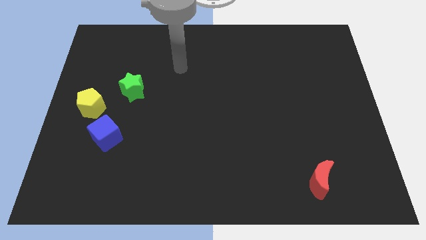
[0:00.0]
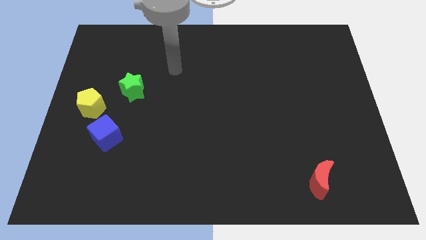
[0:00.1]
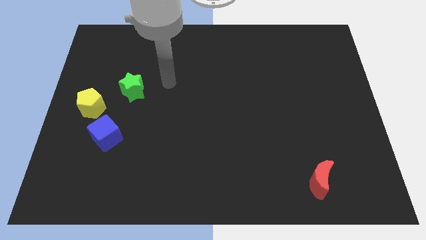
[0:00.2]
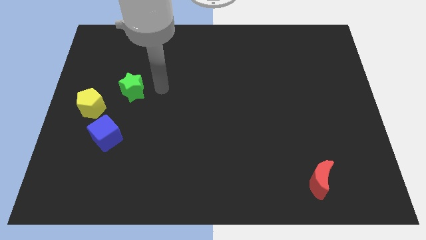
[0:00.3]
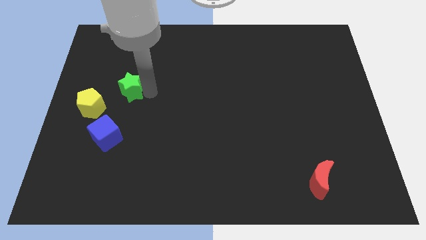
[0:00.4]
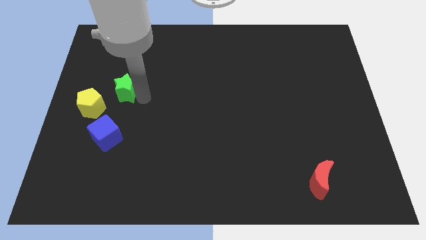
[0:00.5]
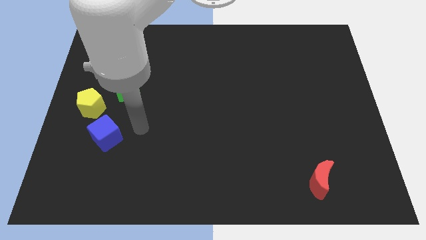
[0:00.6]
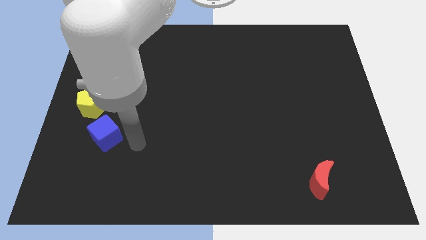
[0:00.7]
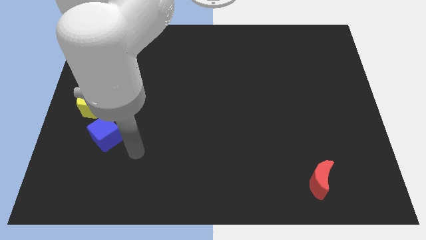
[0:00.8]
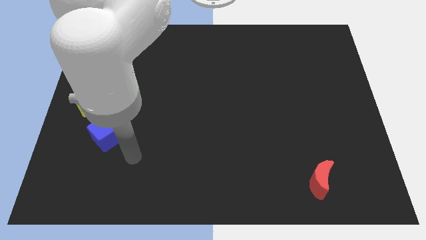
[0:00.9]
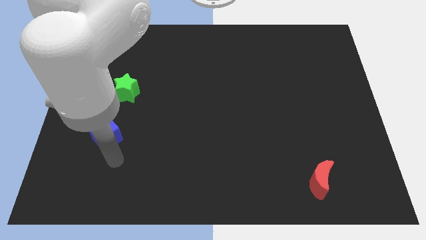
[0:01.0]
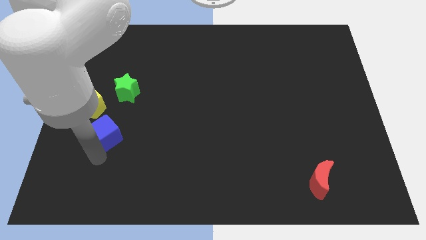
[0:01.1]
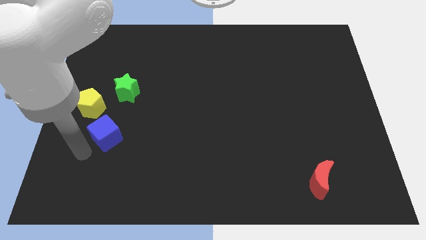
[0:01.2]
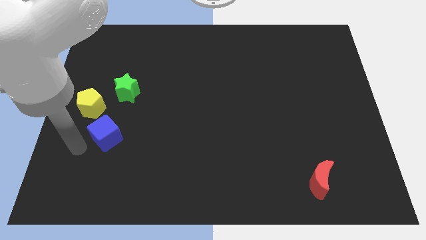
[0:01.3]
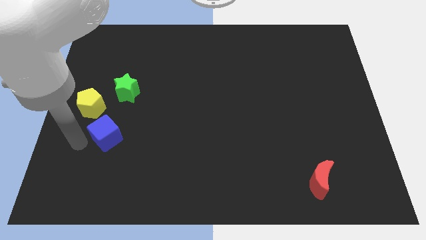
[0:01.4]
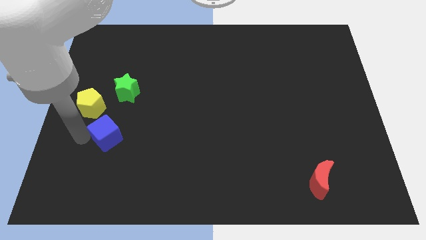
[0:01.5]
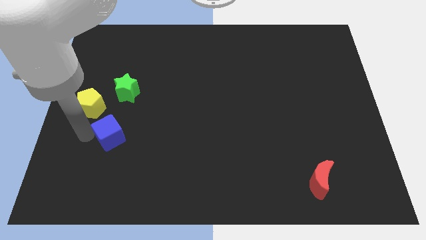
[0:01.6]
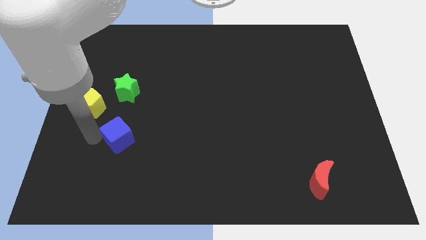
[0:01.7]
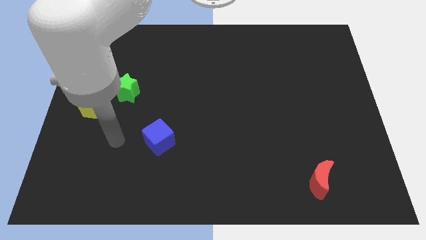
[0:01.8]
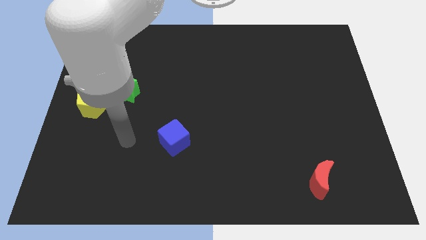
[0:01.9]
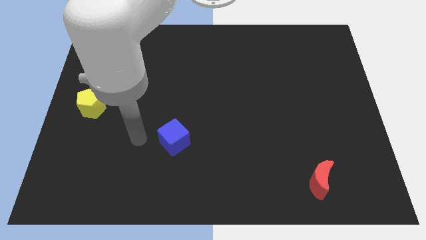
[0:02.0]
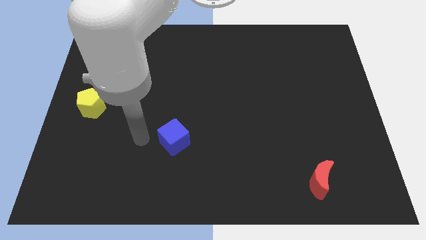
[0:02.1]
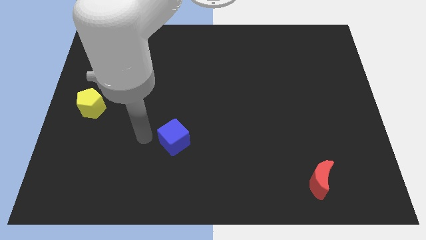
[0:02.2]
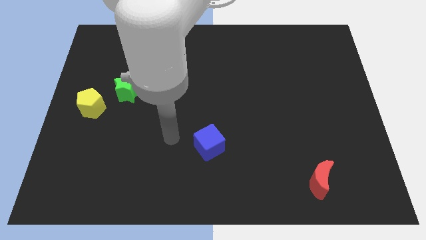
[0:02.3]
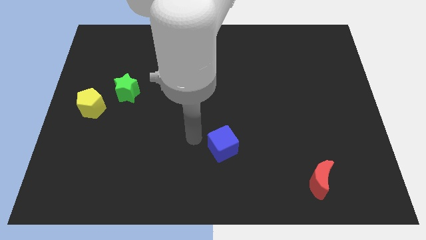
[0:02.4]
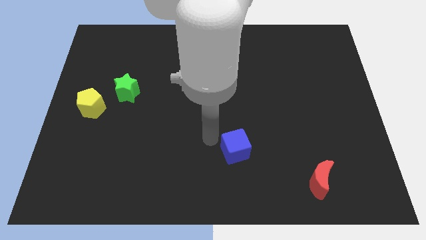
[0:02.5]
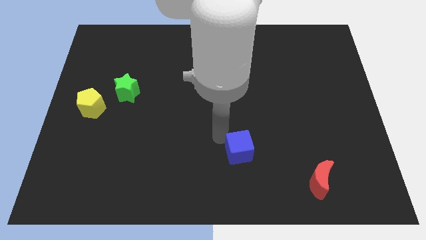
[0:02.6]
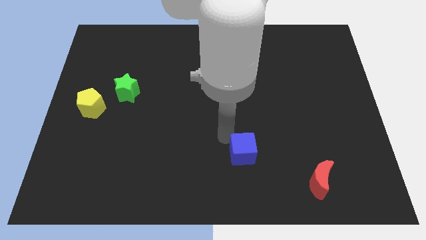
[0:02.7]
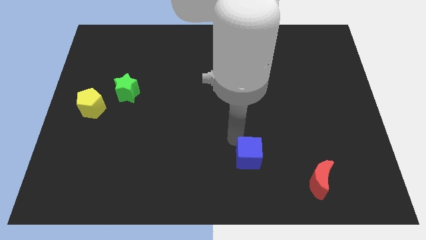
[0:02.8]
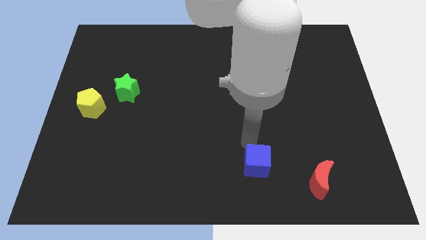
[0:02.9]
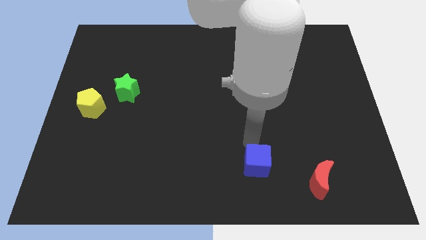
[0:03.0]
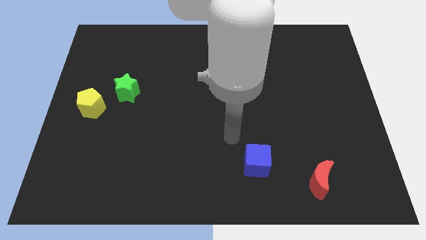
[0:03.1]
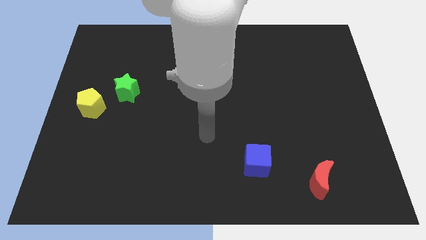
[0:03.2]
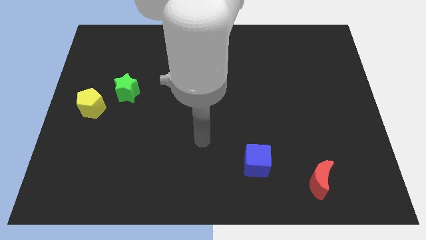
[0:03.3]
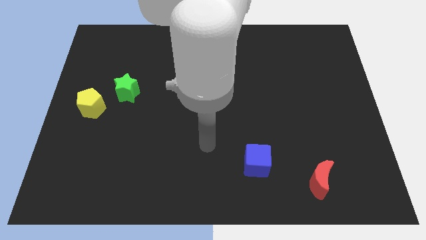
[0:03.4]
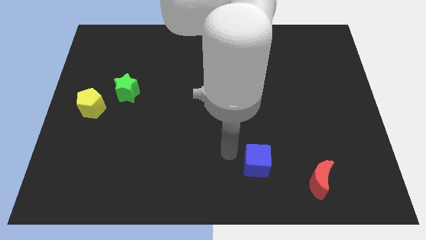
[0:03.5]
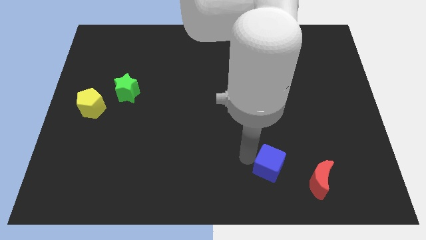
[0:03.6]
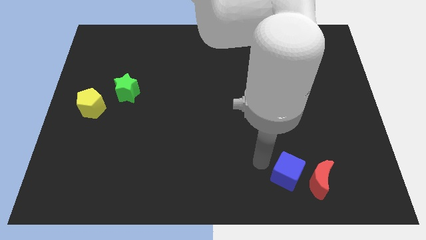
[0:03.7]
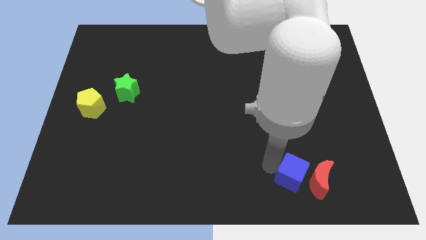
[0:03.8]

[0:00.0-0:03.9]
slide the blue cube next to the red moon

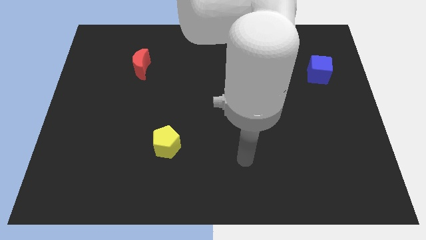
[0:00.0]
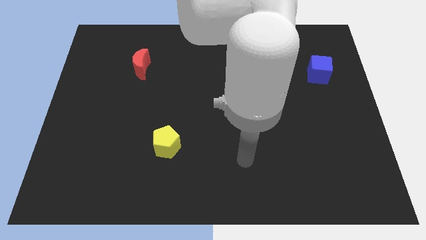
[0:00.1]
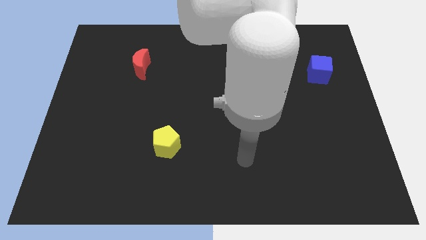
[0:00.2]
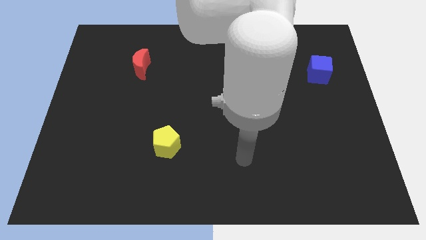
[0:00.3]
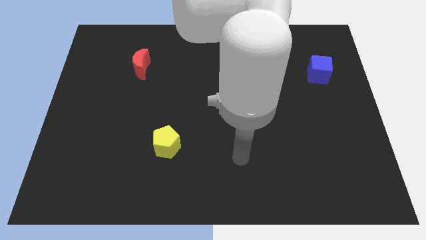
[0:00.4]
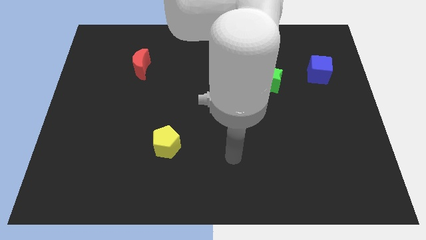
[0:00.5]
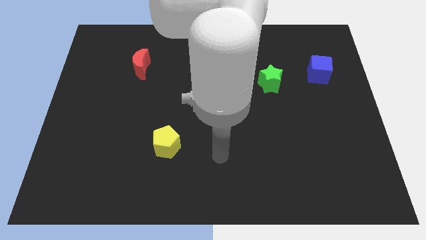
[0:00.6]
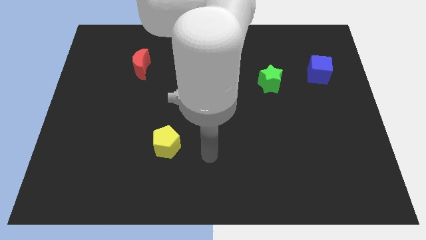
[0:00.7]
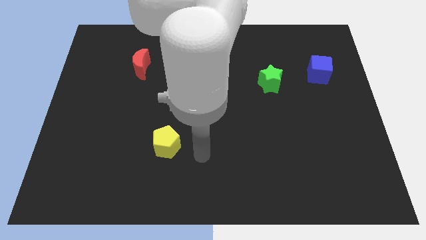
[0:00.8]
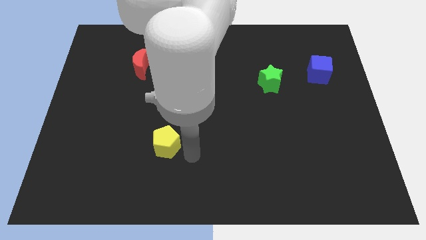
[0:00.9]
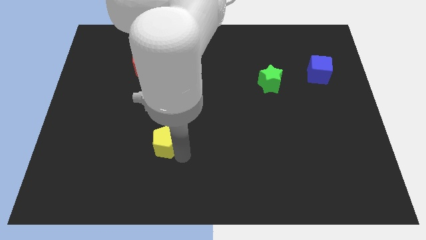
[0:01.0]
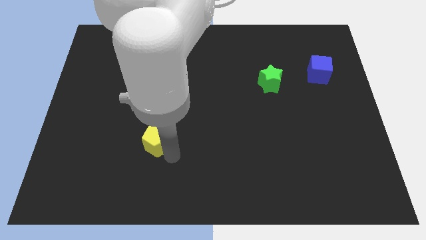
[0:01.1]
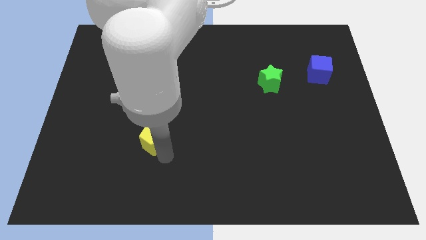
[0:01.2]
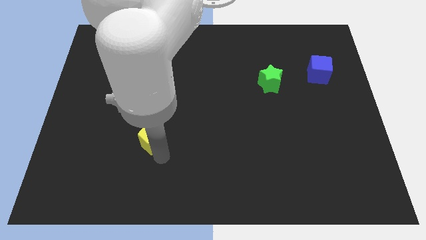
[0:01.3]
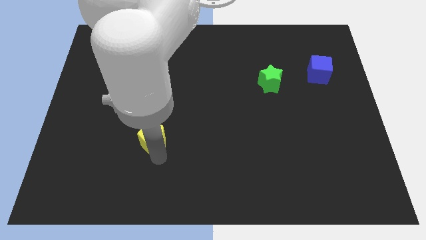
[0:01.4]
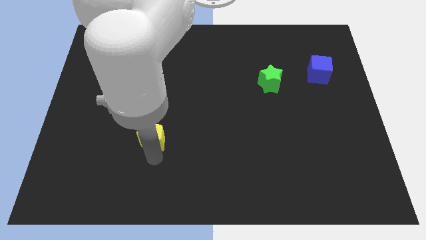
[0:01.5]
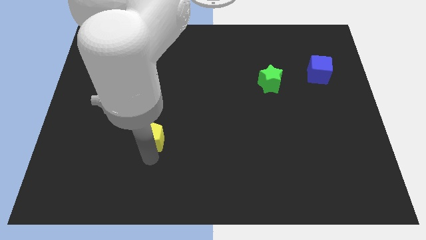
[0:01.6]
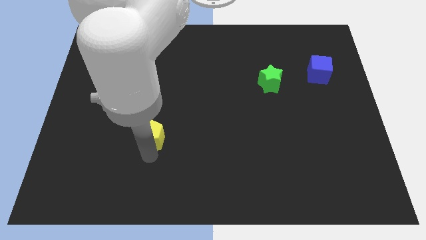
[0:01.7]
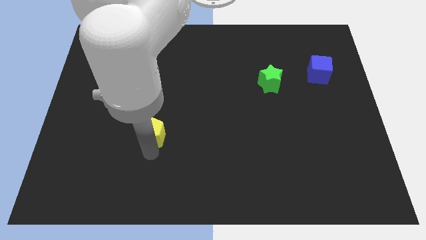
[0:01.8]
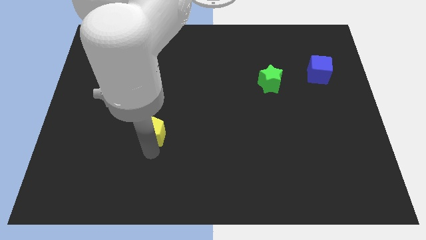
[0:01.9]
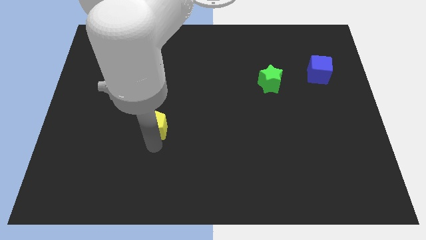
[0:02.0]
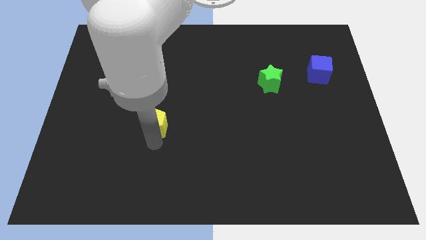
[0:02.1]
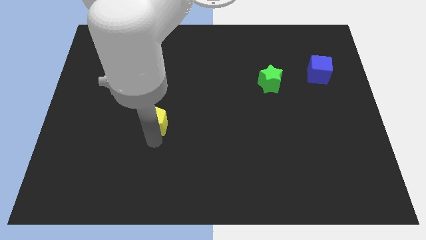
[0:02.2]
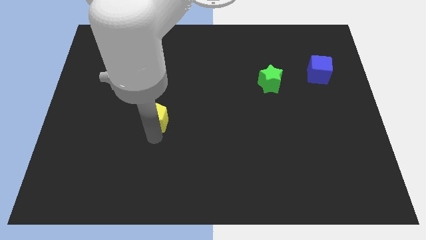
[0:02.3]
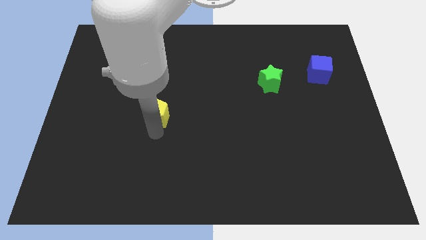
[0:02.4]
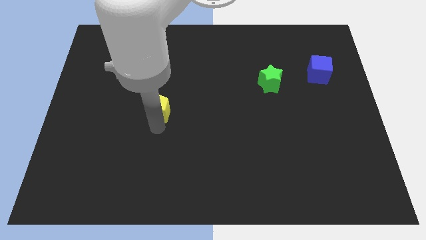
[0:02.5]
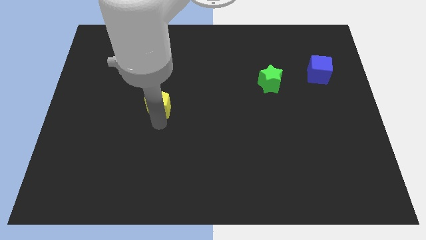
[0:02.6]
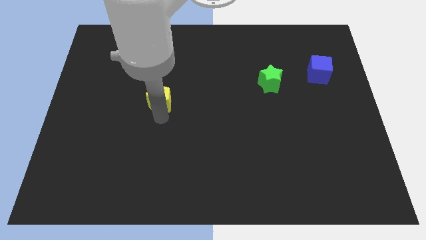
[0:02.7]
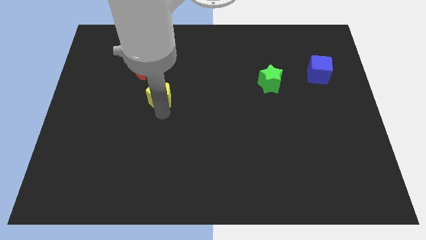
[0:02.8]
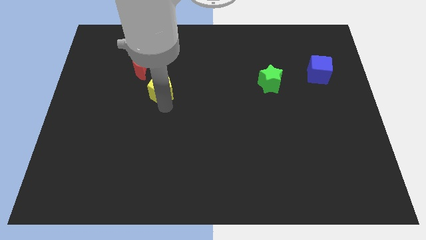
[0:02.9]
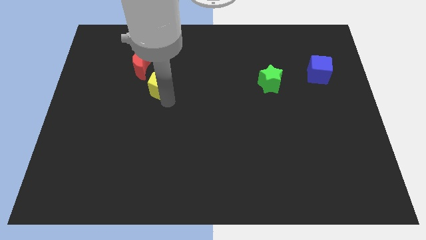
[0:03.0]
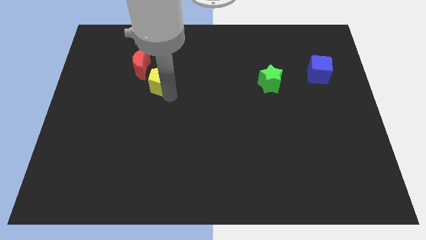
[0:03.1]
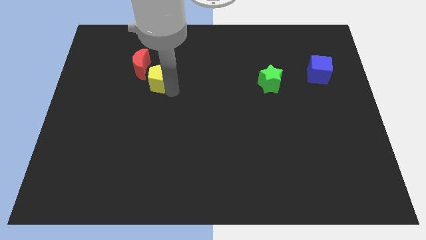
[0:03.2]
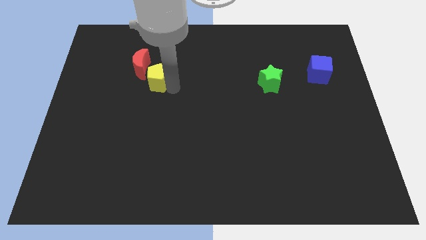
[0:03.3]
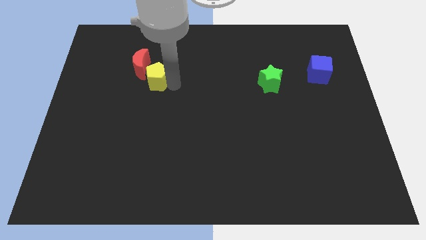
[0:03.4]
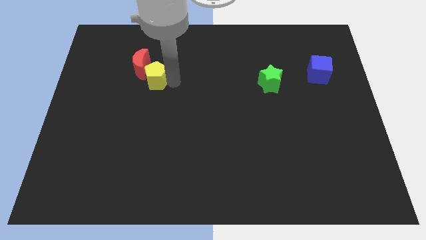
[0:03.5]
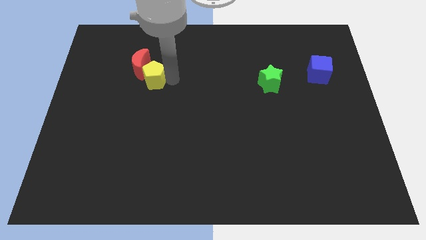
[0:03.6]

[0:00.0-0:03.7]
put the pentagon to the moon

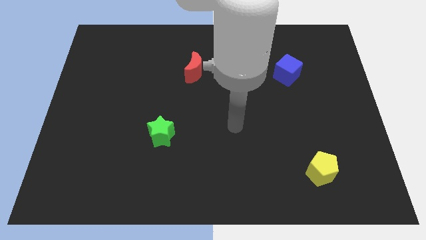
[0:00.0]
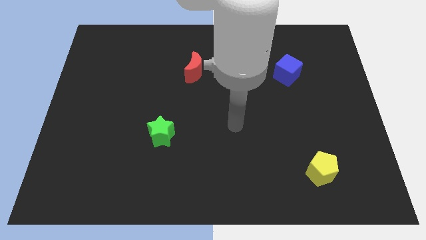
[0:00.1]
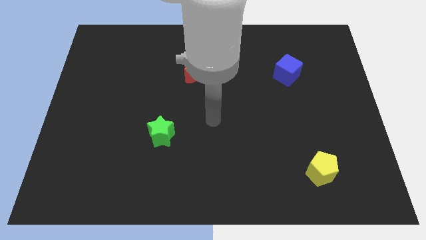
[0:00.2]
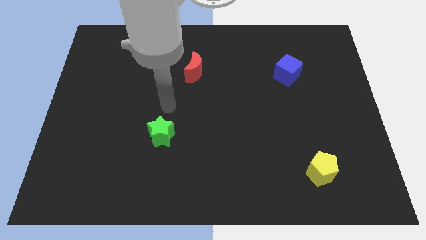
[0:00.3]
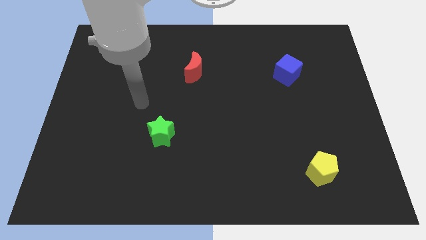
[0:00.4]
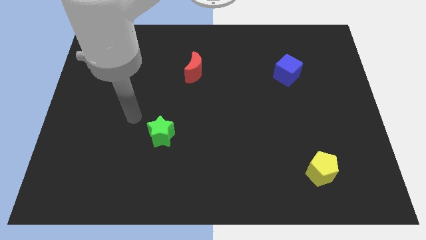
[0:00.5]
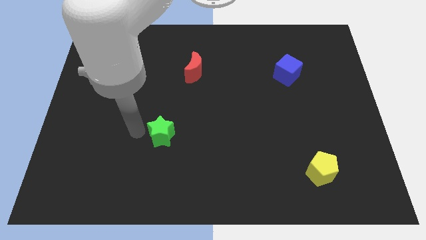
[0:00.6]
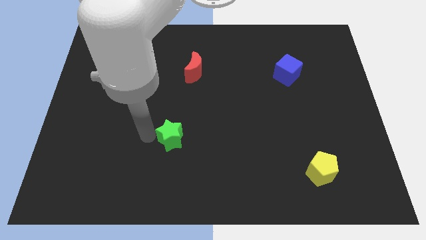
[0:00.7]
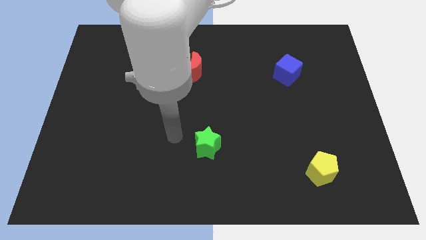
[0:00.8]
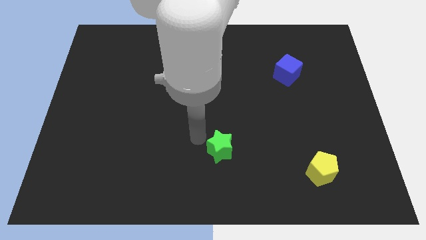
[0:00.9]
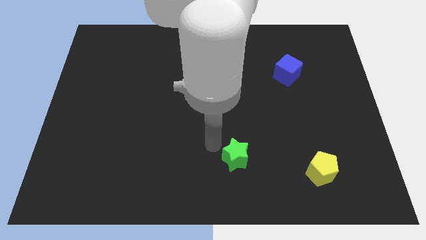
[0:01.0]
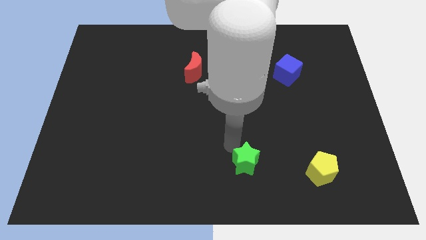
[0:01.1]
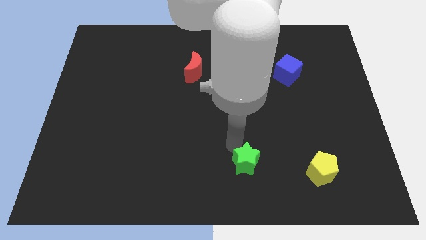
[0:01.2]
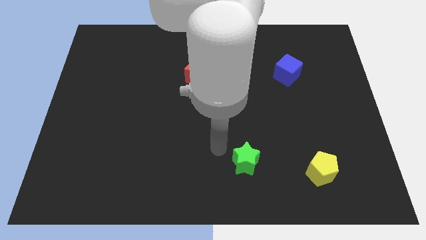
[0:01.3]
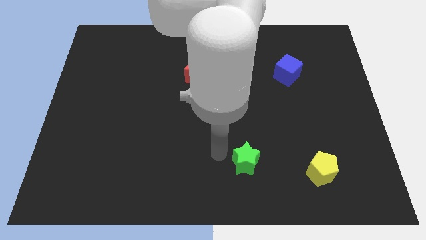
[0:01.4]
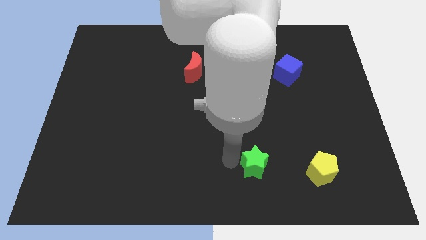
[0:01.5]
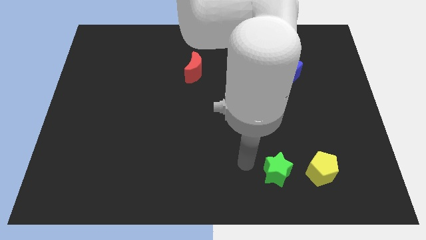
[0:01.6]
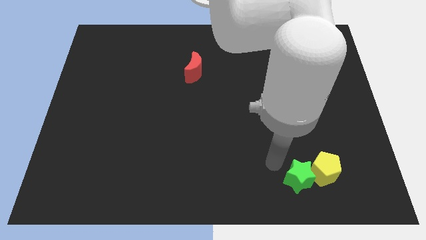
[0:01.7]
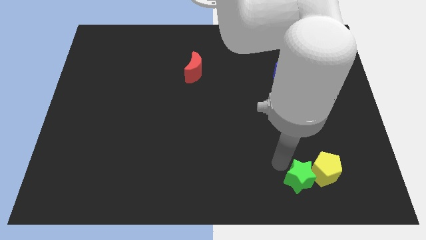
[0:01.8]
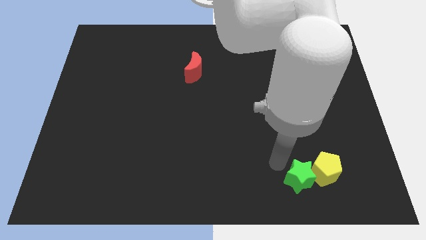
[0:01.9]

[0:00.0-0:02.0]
put the star to the pentagon
